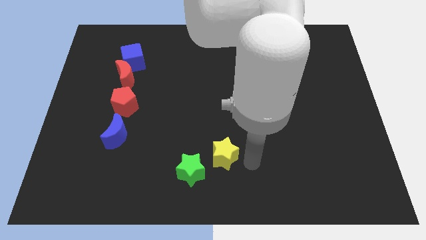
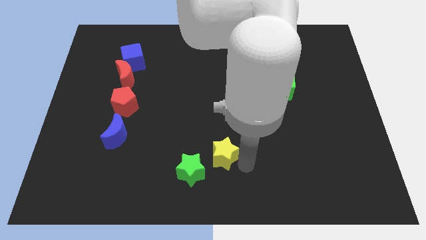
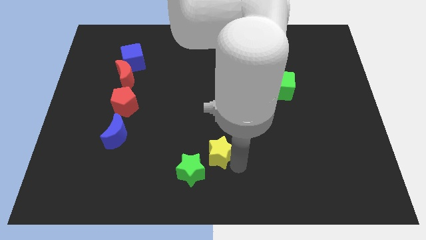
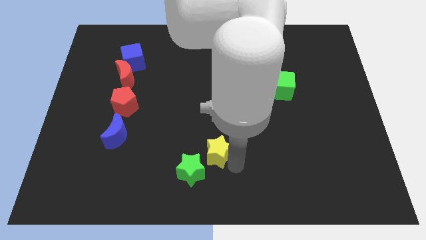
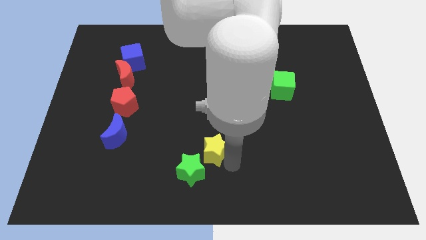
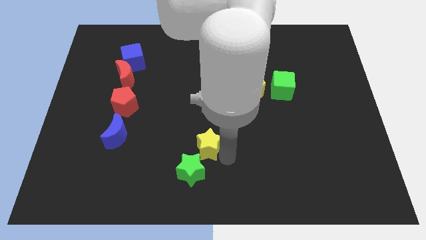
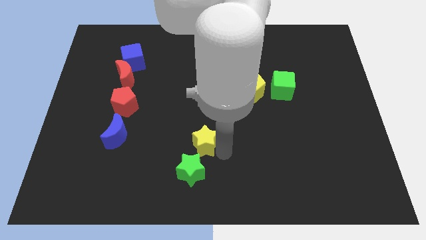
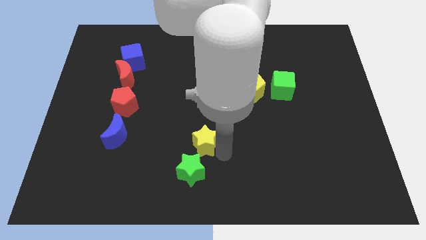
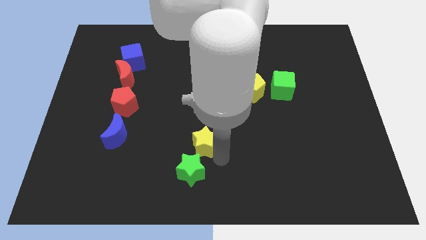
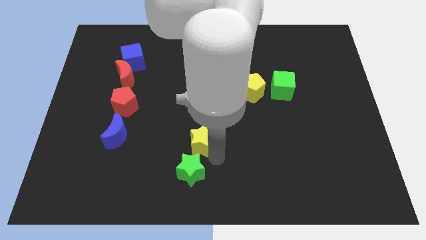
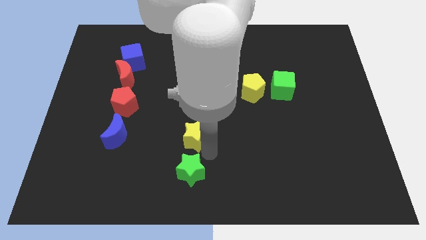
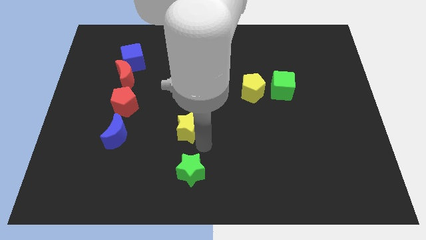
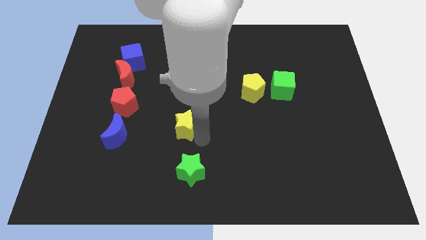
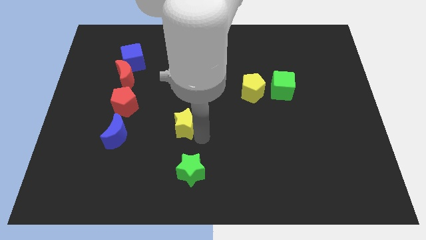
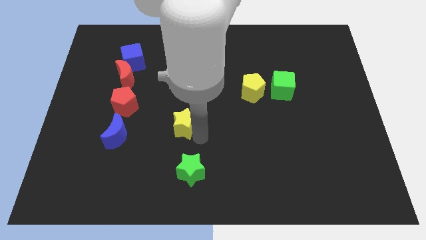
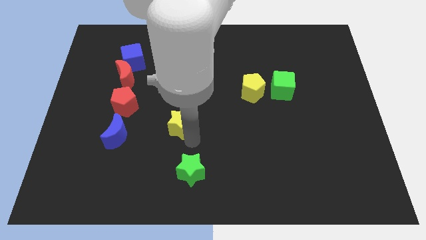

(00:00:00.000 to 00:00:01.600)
place yellow star to the top of green star

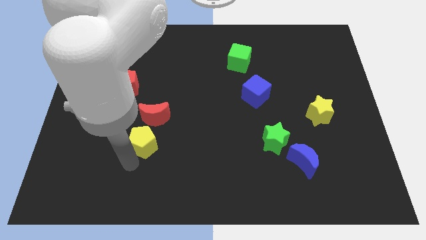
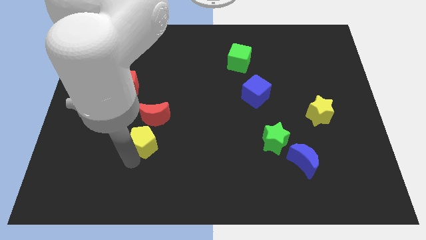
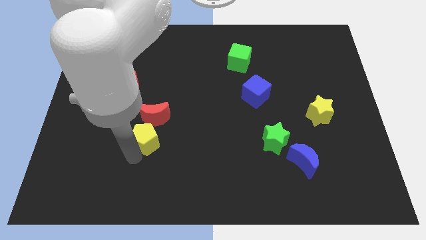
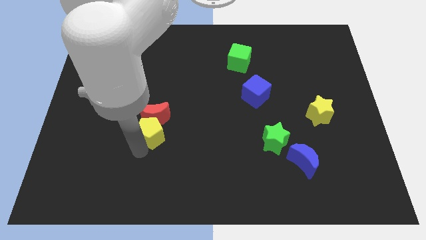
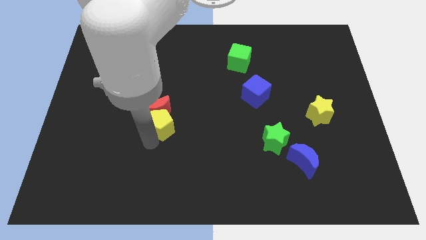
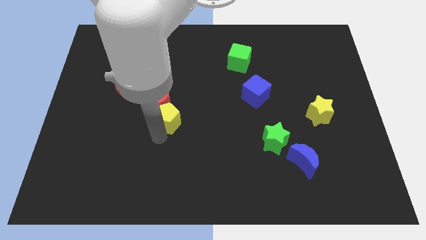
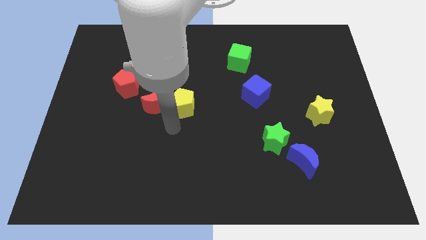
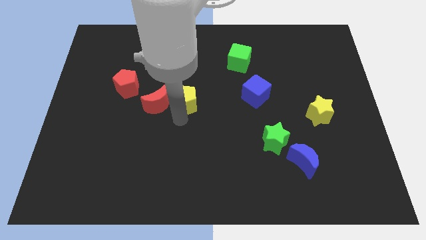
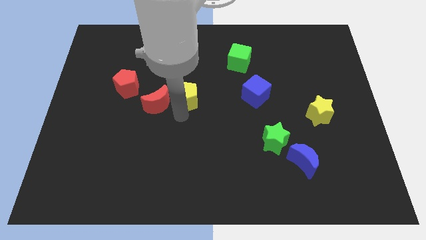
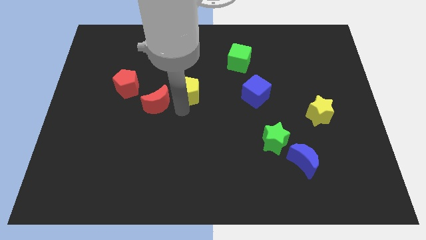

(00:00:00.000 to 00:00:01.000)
push the yellow pentagon to the right of the red crescent

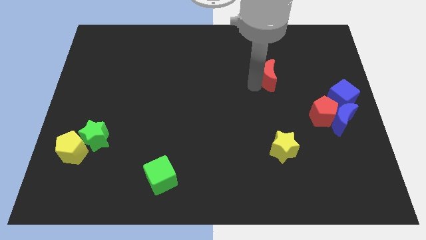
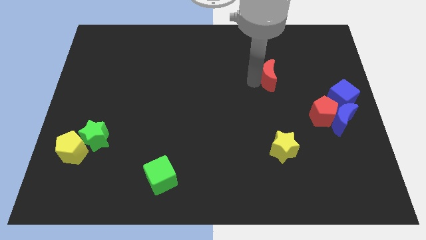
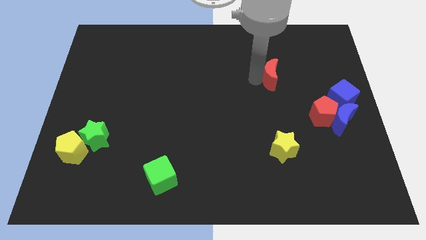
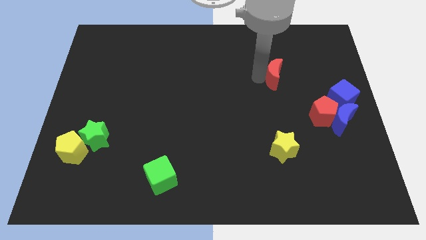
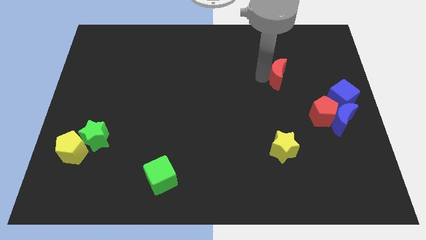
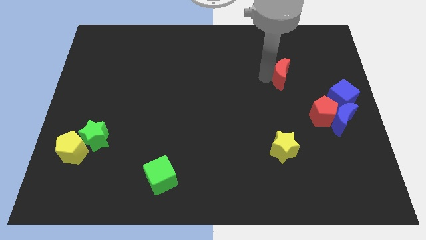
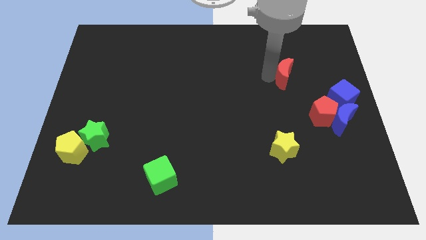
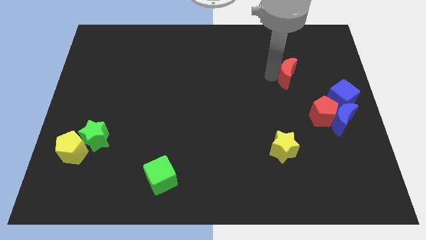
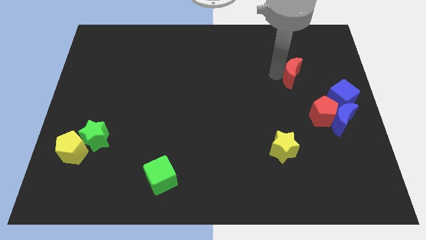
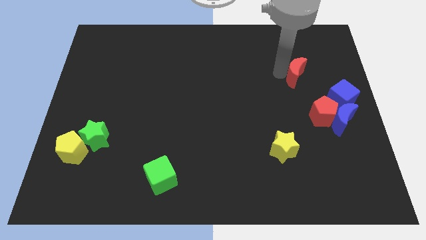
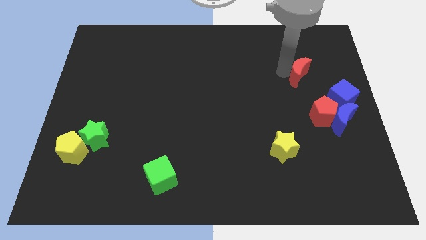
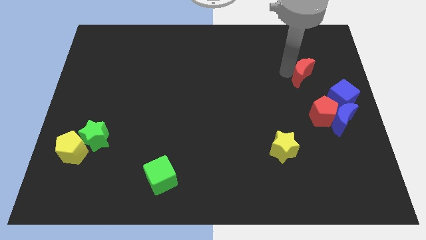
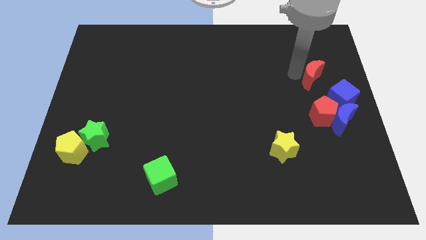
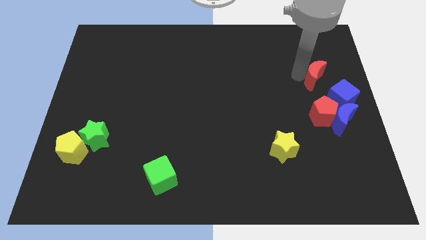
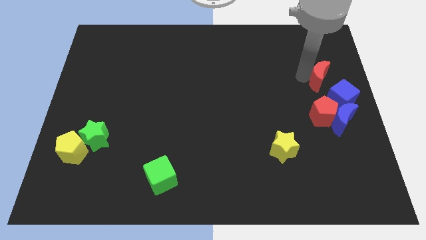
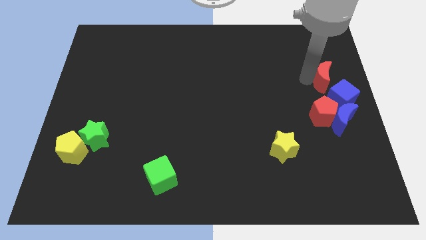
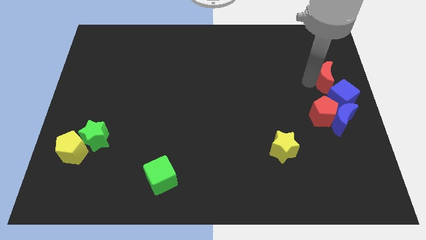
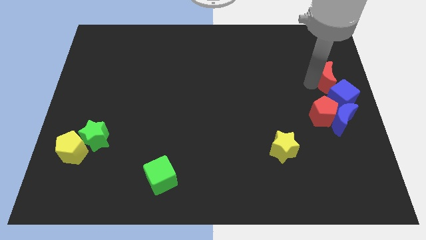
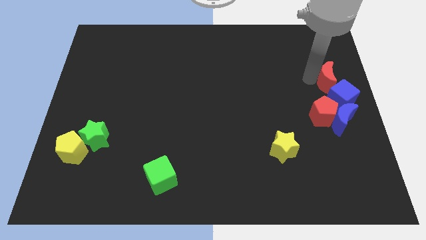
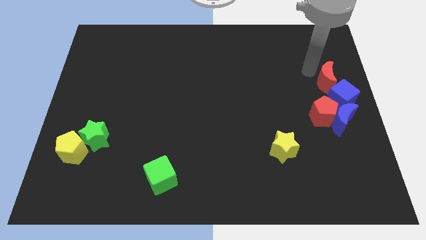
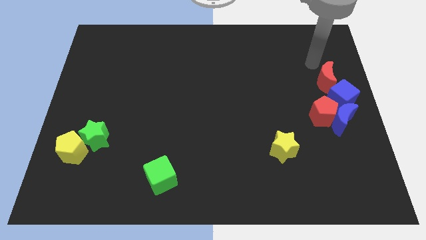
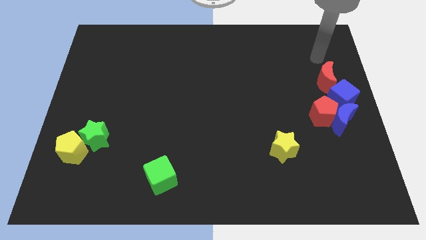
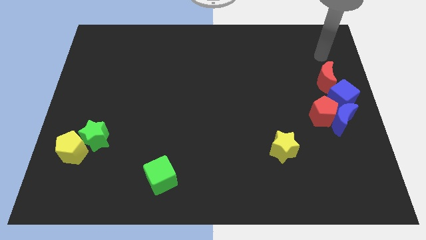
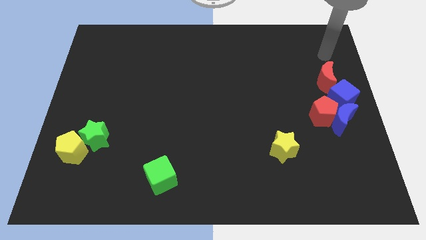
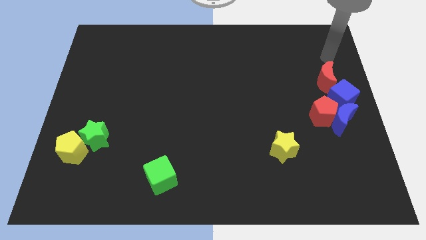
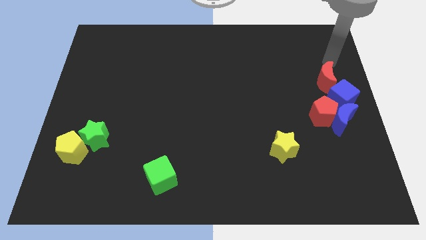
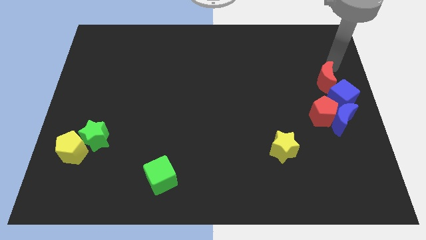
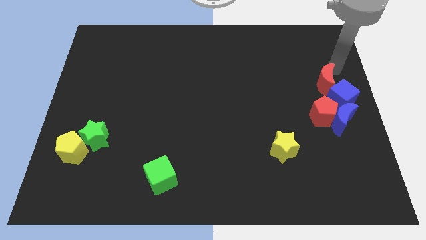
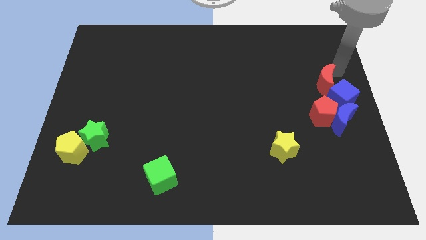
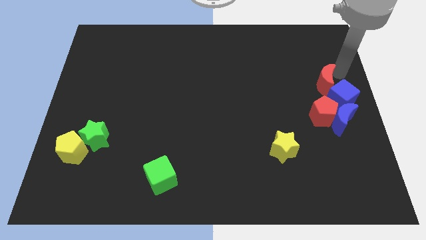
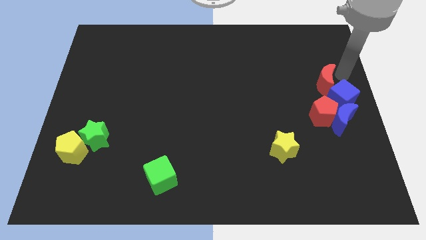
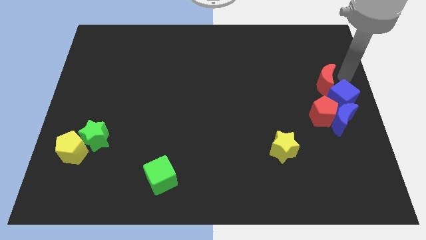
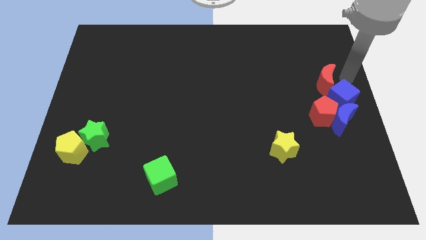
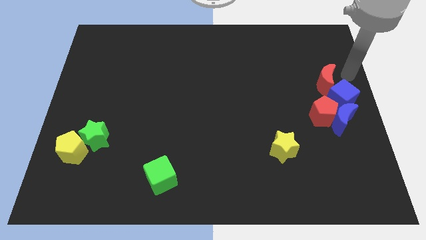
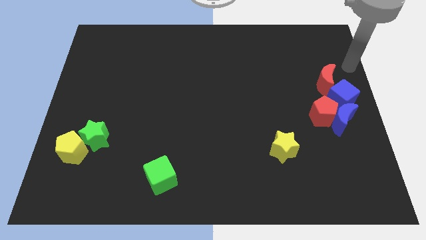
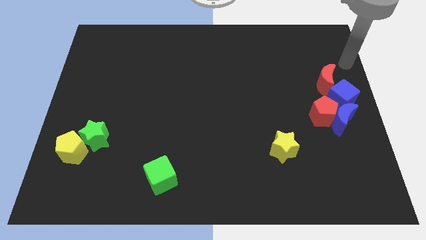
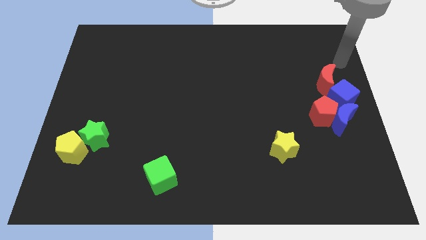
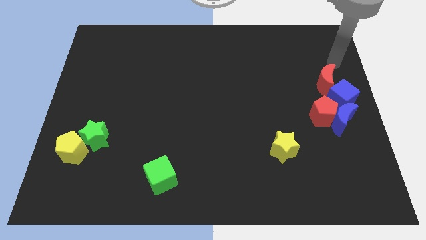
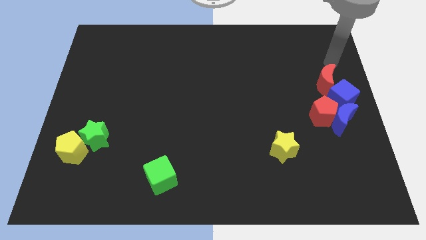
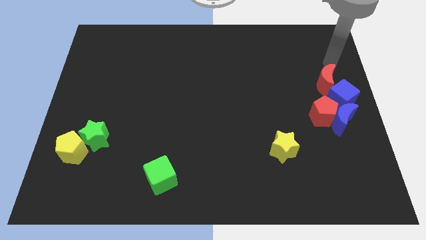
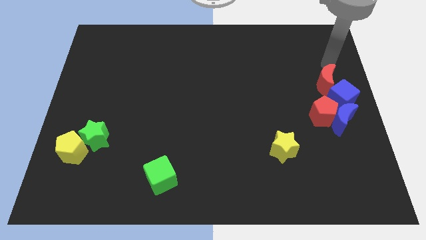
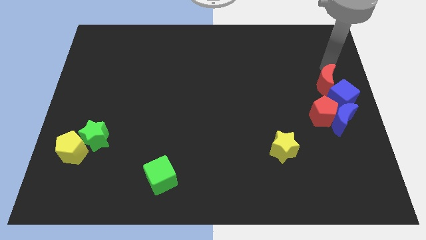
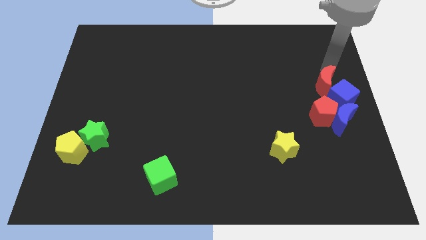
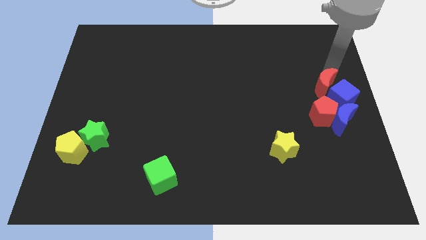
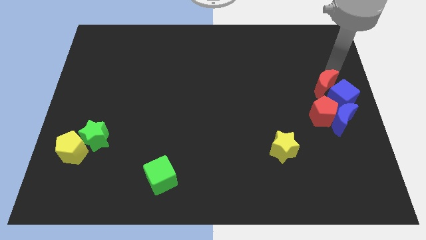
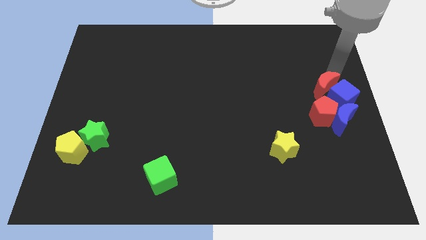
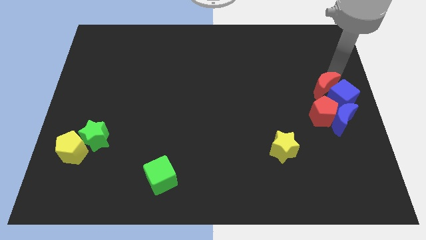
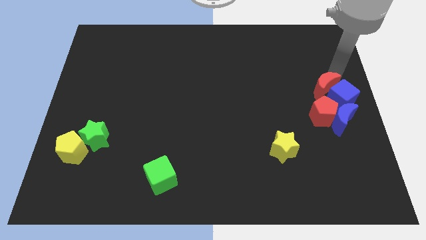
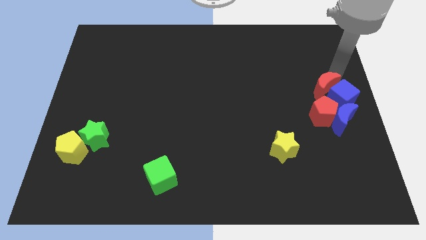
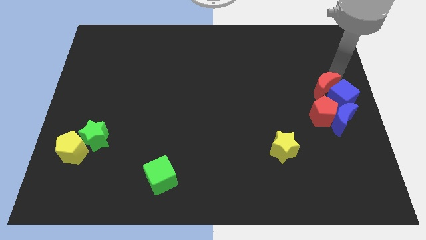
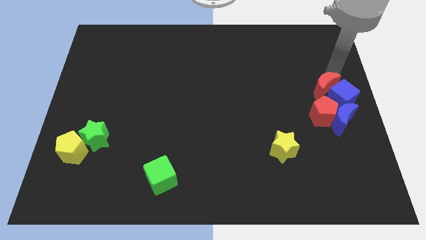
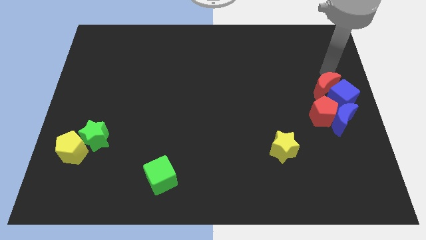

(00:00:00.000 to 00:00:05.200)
slide red moon into blue cube

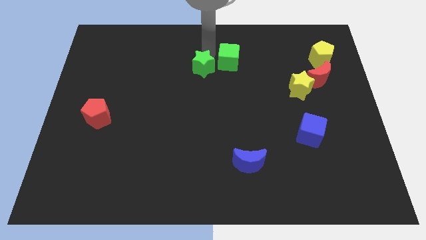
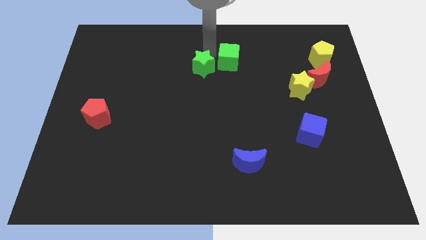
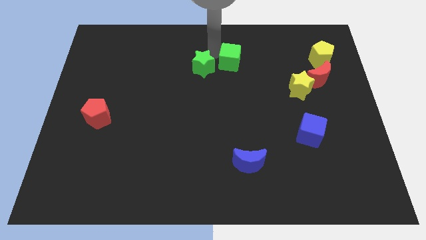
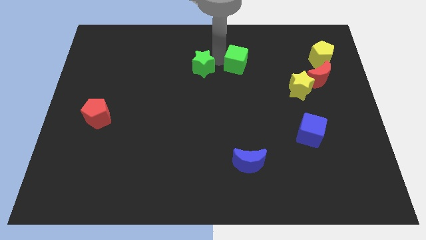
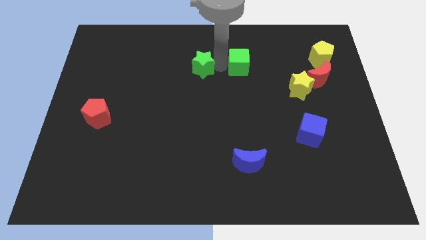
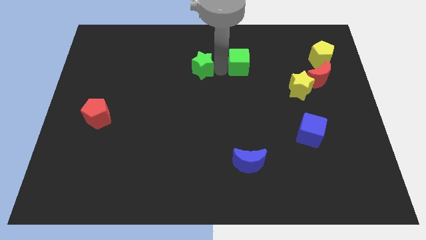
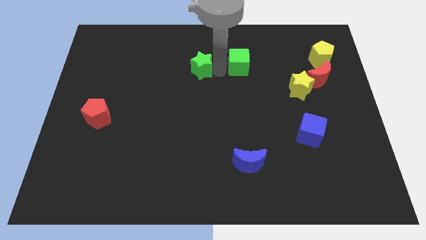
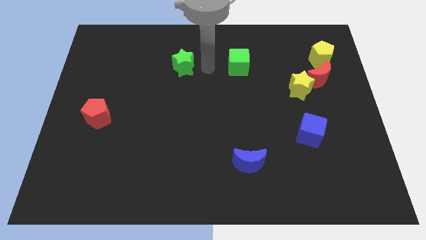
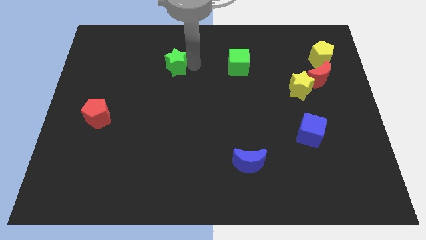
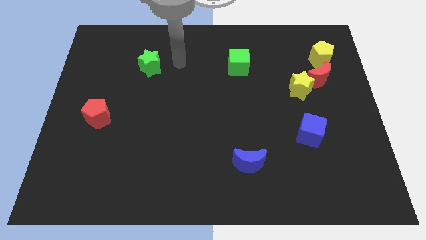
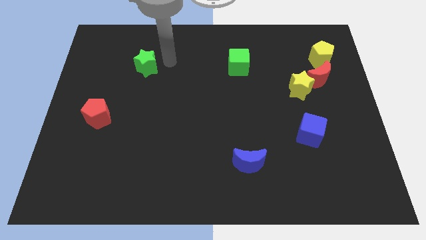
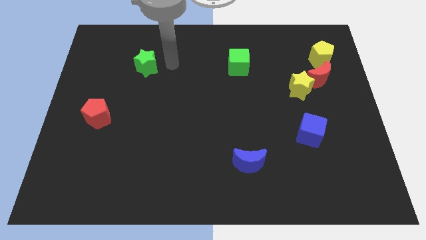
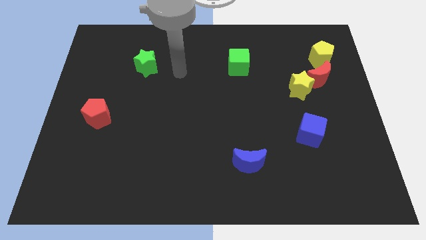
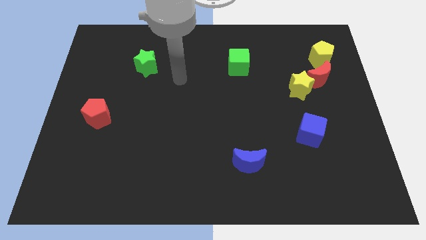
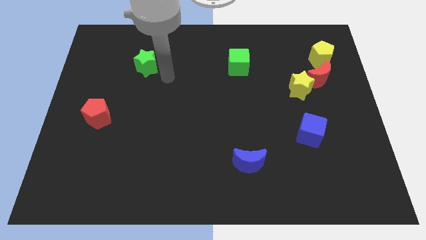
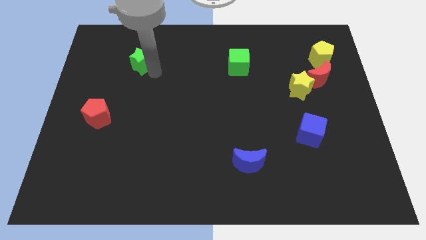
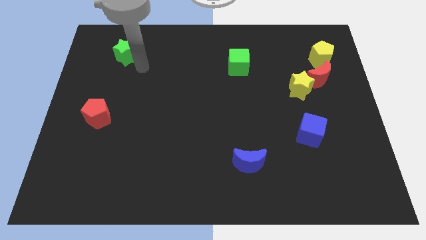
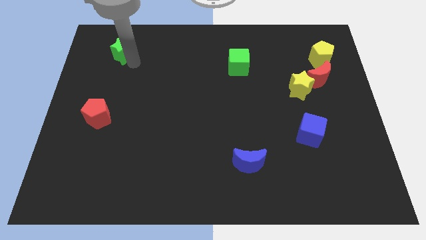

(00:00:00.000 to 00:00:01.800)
separate the green star from green cube
